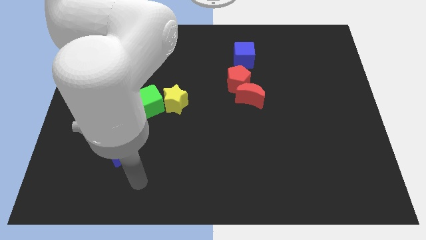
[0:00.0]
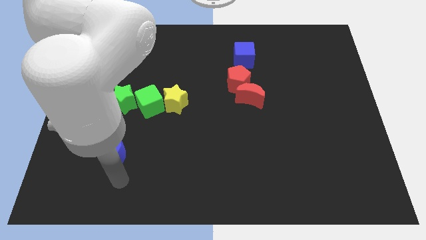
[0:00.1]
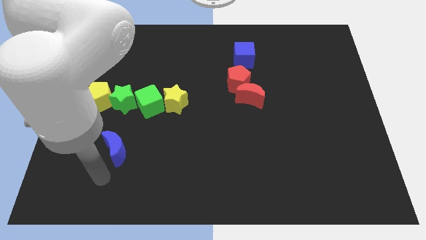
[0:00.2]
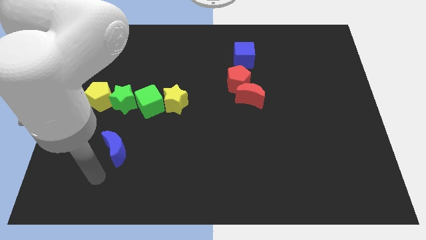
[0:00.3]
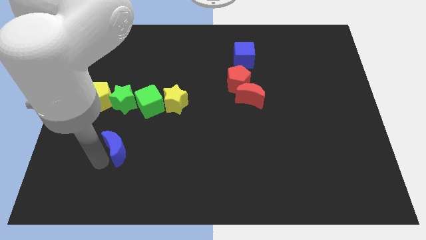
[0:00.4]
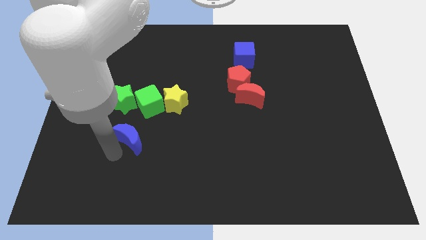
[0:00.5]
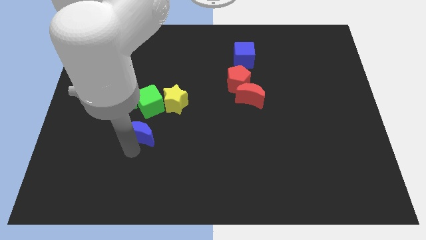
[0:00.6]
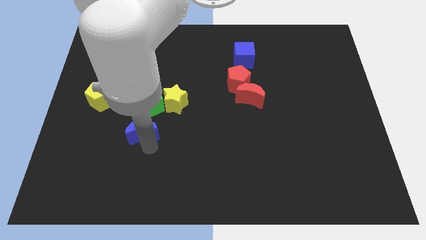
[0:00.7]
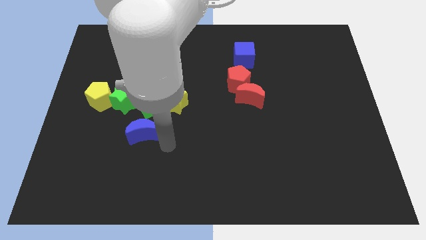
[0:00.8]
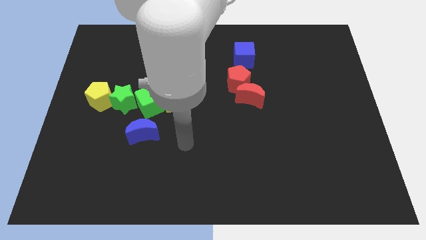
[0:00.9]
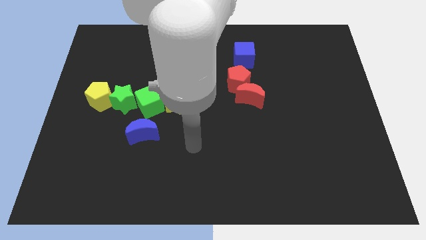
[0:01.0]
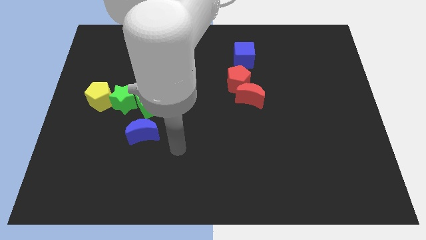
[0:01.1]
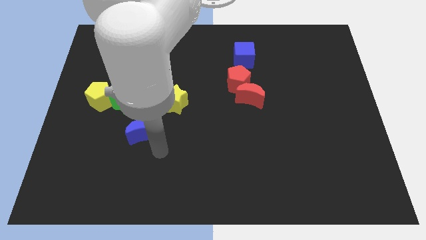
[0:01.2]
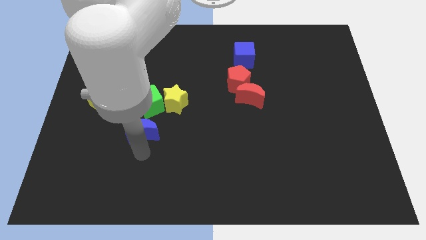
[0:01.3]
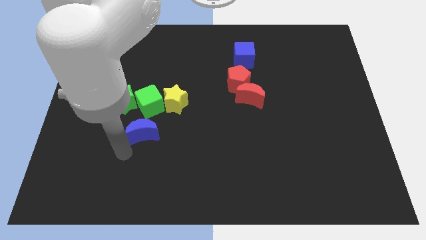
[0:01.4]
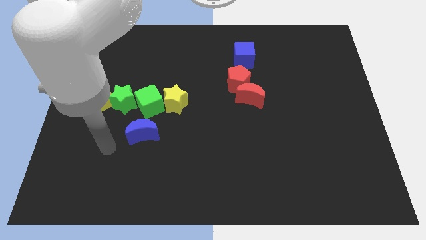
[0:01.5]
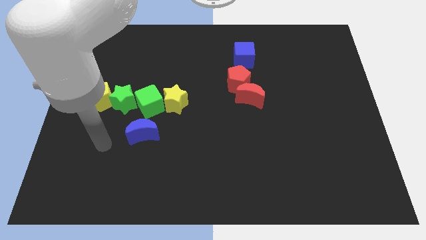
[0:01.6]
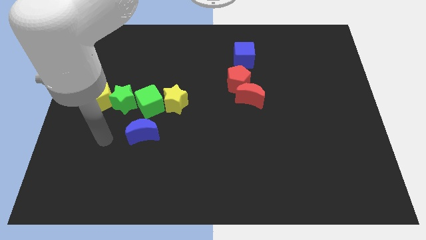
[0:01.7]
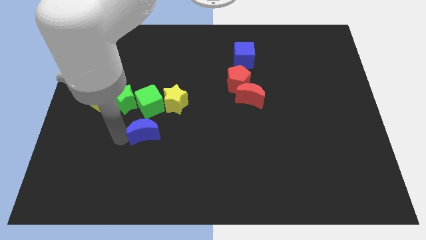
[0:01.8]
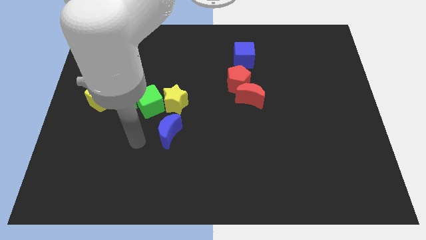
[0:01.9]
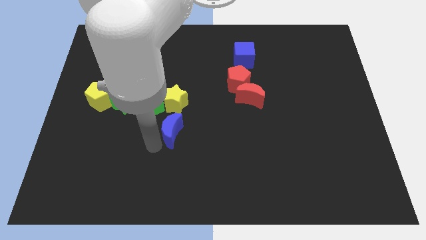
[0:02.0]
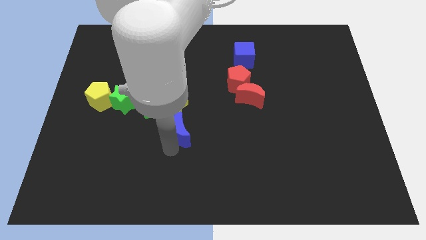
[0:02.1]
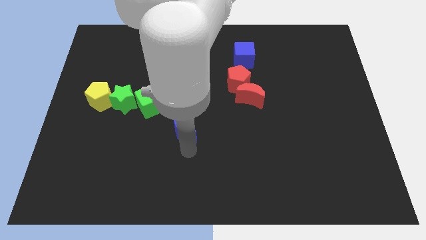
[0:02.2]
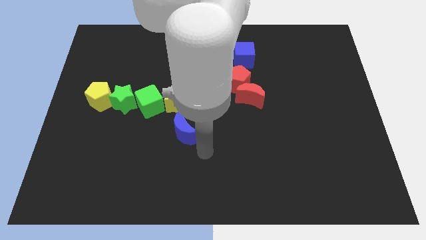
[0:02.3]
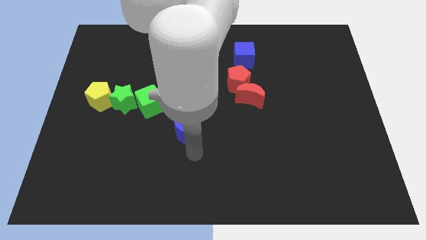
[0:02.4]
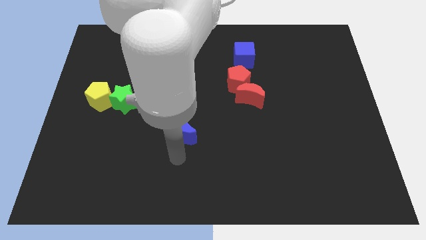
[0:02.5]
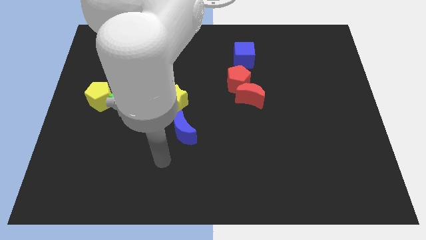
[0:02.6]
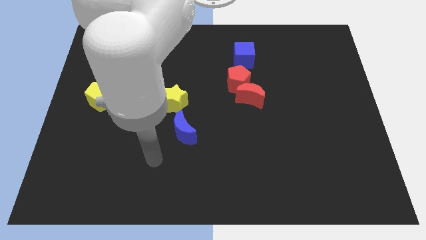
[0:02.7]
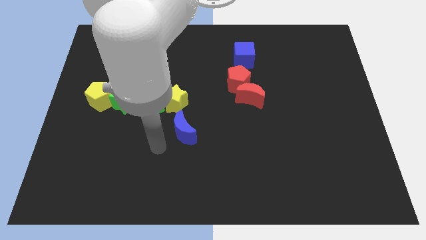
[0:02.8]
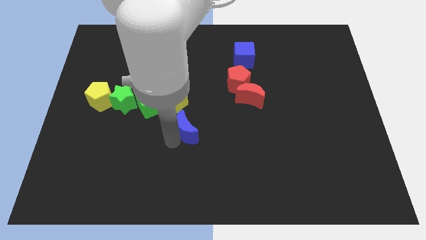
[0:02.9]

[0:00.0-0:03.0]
drag the blue crescent below the yellow star

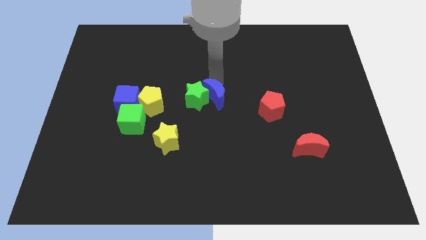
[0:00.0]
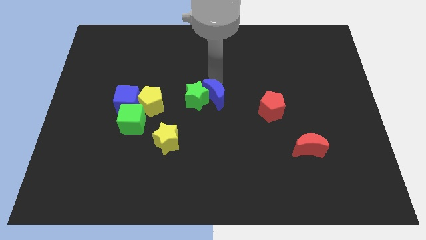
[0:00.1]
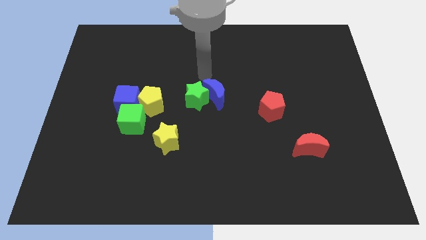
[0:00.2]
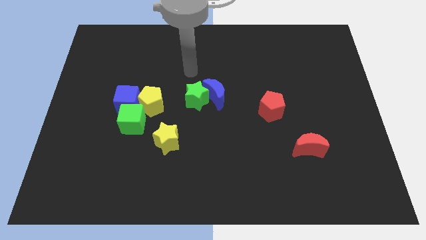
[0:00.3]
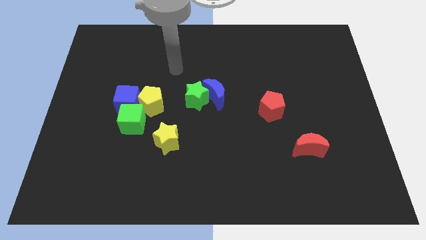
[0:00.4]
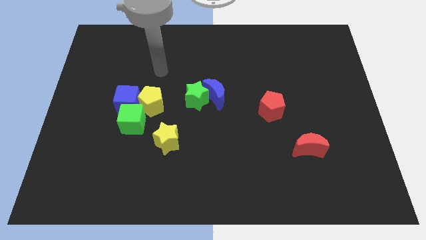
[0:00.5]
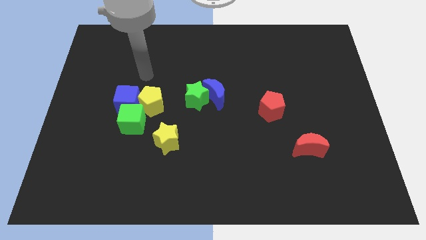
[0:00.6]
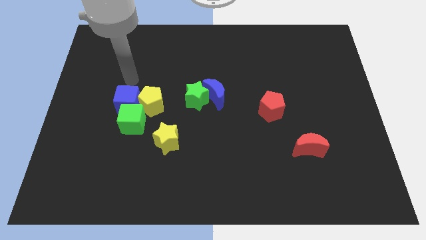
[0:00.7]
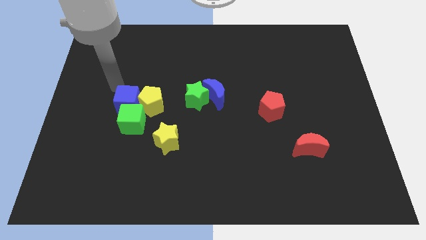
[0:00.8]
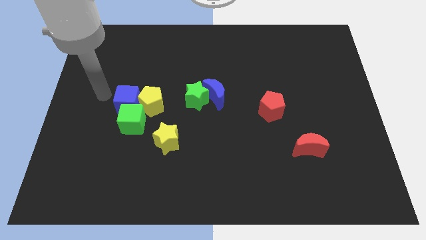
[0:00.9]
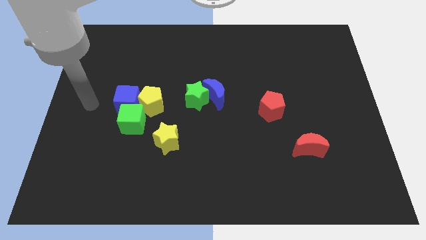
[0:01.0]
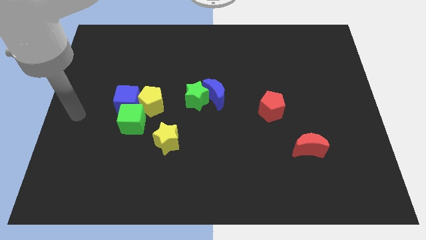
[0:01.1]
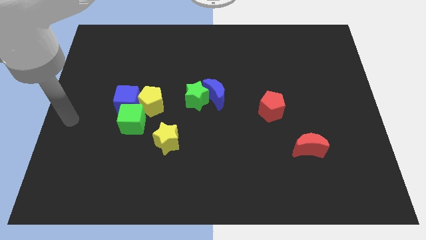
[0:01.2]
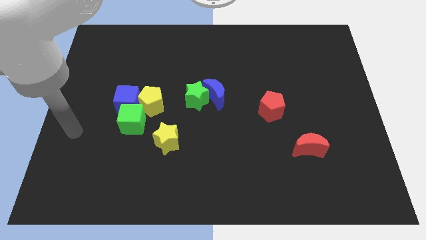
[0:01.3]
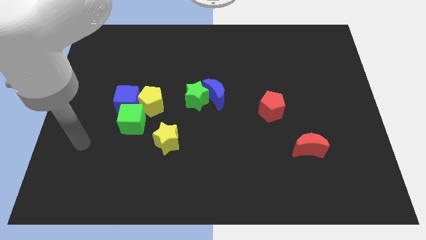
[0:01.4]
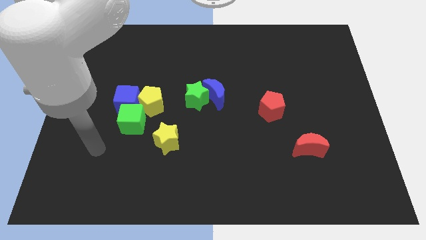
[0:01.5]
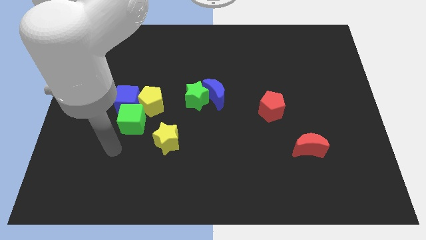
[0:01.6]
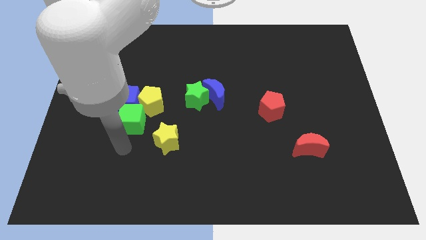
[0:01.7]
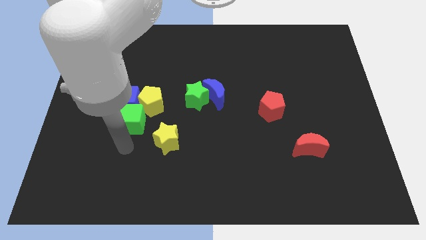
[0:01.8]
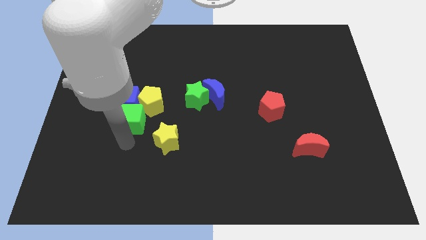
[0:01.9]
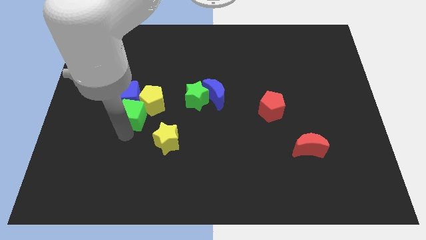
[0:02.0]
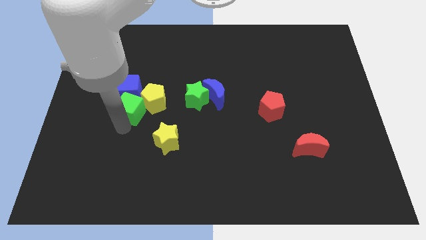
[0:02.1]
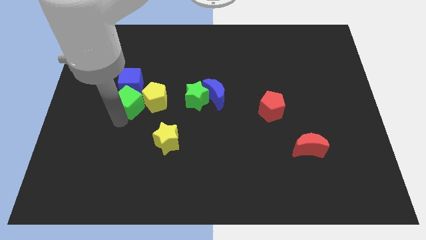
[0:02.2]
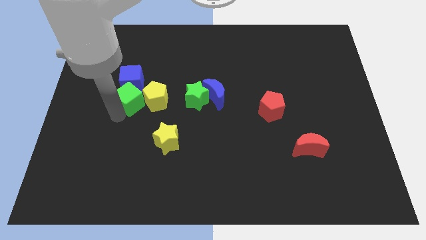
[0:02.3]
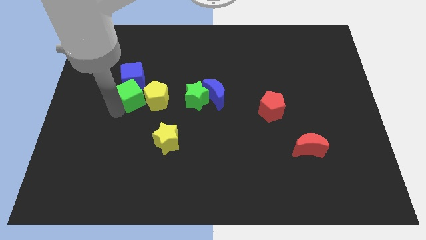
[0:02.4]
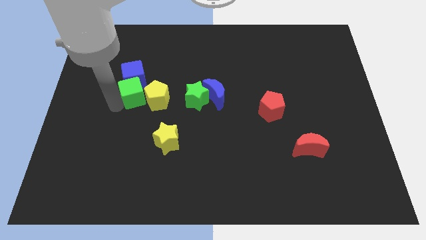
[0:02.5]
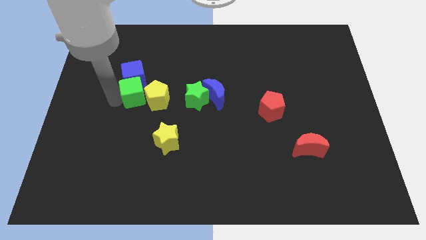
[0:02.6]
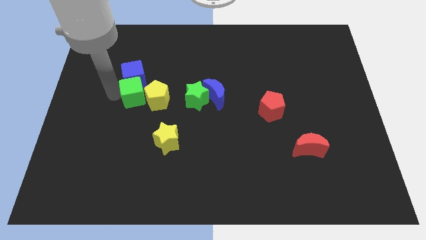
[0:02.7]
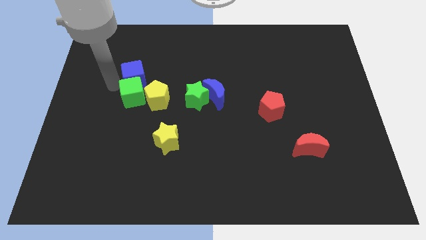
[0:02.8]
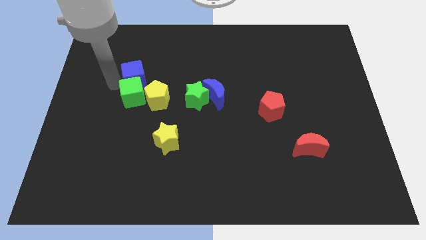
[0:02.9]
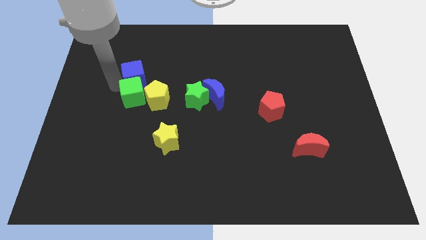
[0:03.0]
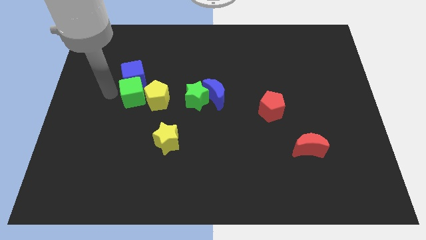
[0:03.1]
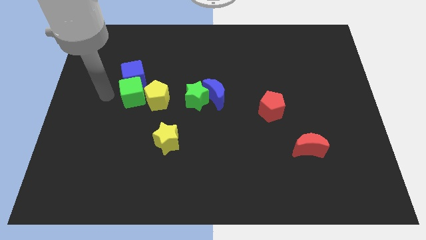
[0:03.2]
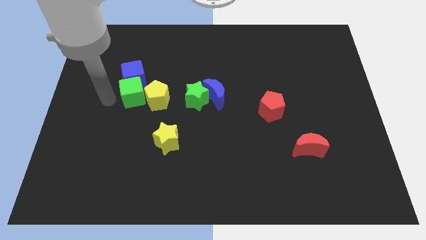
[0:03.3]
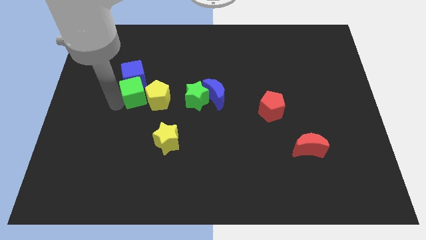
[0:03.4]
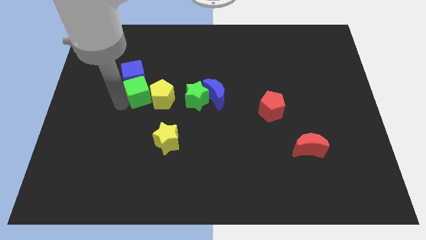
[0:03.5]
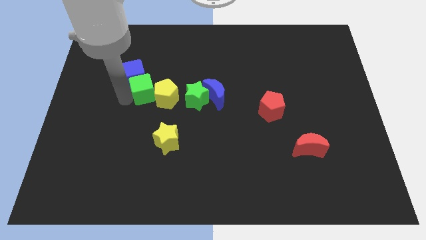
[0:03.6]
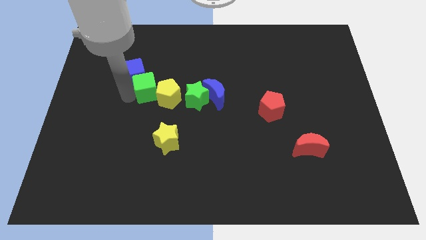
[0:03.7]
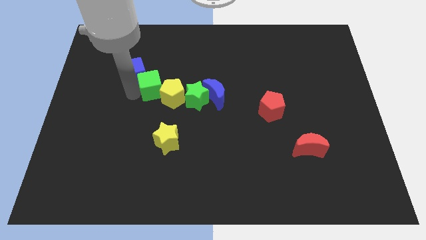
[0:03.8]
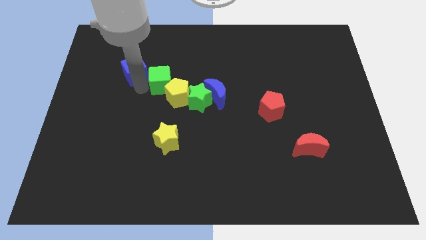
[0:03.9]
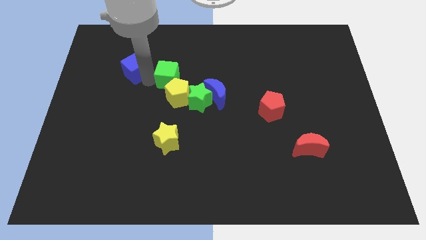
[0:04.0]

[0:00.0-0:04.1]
place green cube to the top left of yellow pentagon

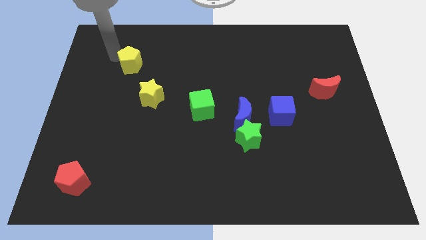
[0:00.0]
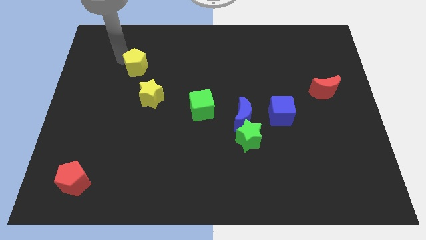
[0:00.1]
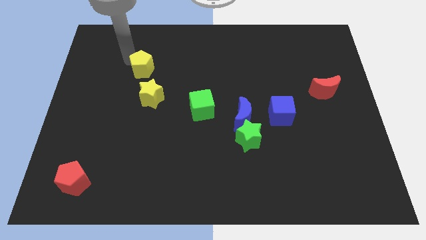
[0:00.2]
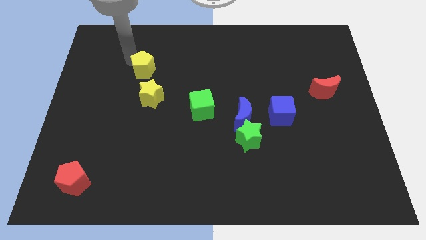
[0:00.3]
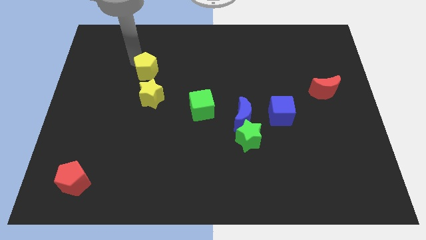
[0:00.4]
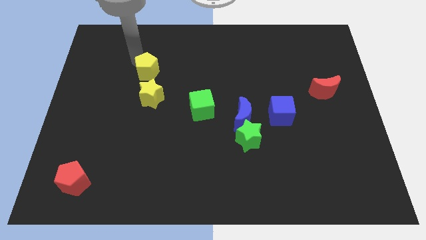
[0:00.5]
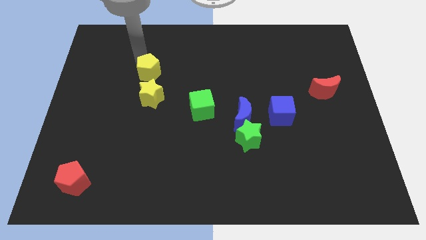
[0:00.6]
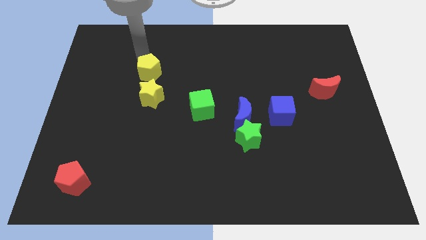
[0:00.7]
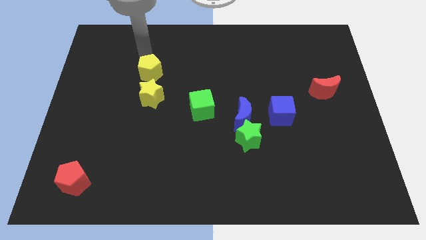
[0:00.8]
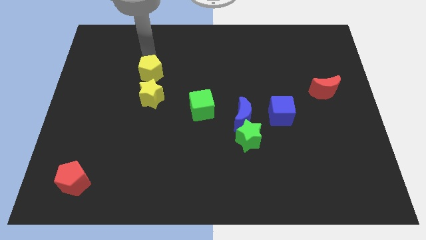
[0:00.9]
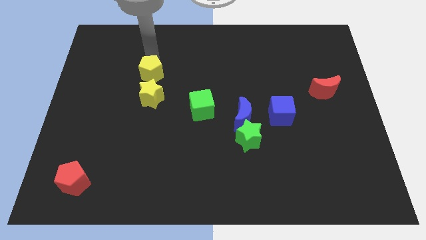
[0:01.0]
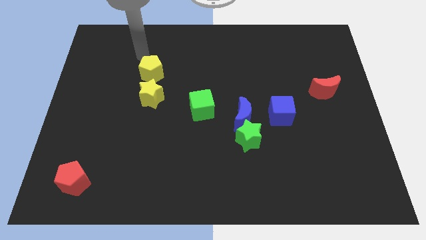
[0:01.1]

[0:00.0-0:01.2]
move the yellow pentagon above the yellow star

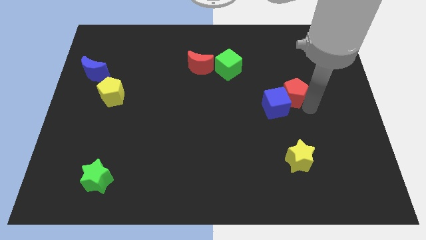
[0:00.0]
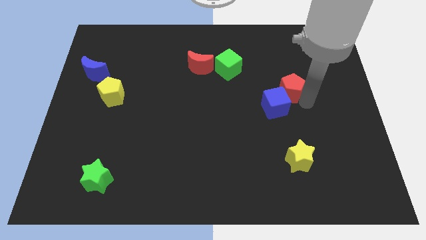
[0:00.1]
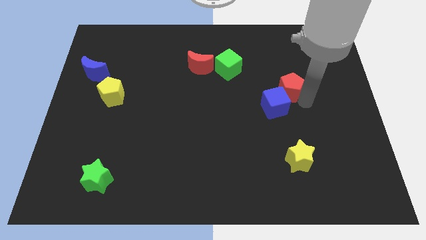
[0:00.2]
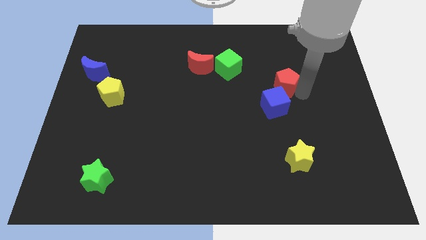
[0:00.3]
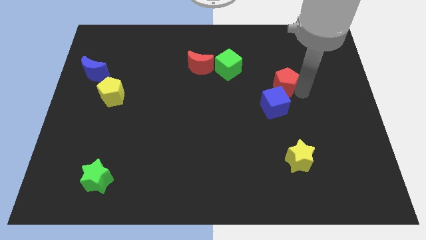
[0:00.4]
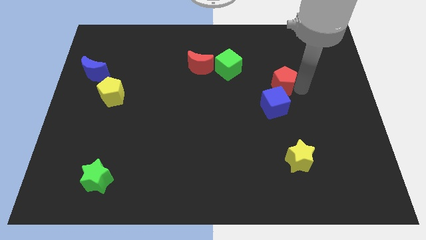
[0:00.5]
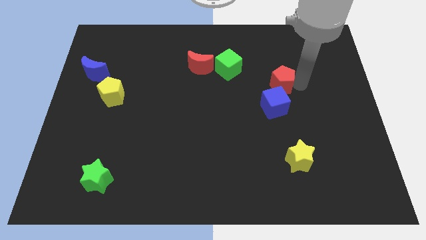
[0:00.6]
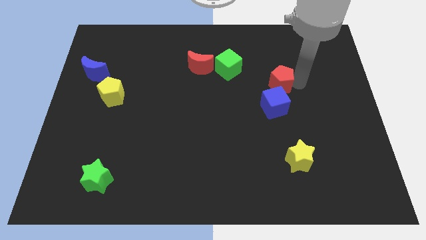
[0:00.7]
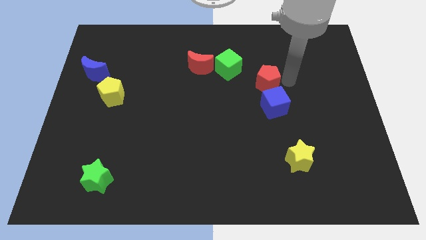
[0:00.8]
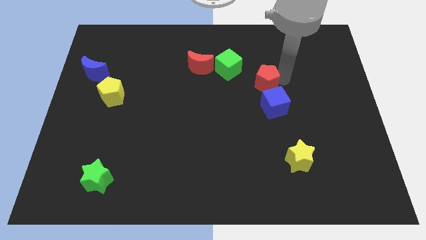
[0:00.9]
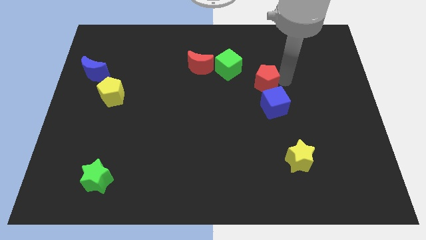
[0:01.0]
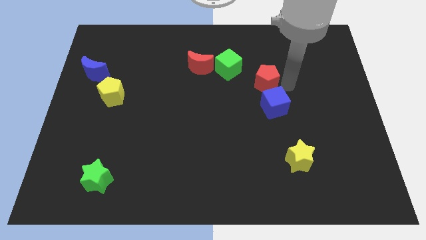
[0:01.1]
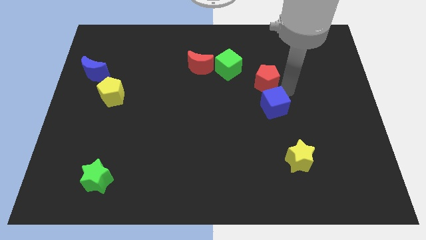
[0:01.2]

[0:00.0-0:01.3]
place the red pentagon diagonal to the green star
